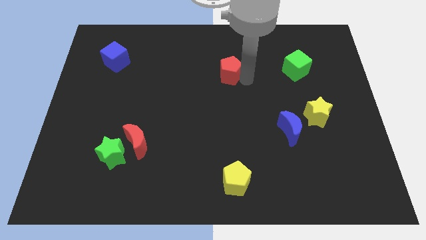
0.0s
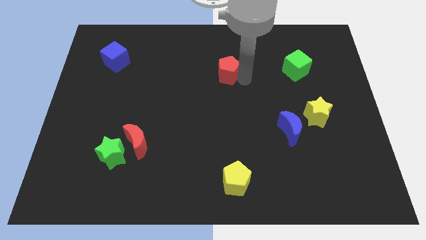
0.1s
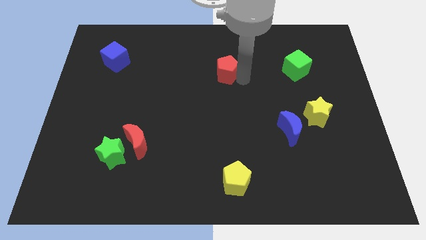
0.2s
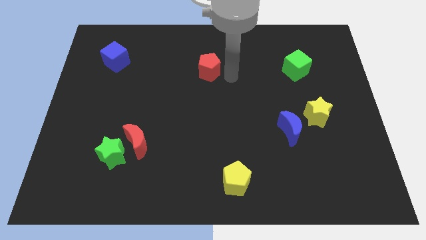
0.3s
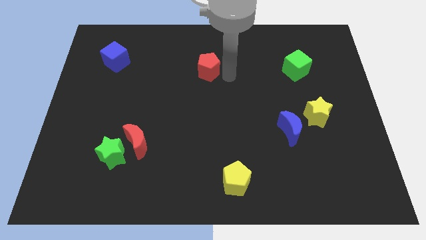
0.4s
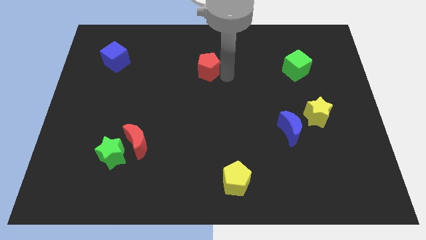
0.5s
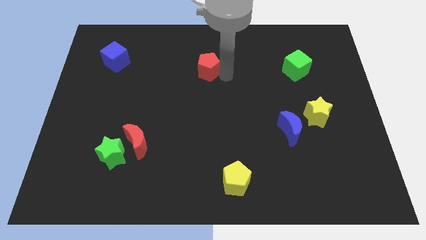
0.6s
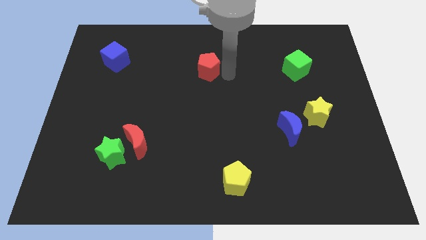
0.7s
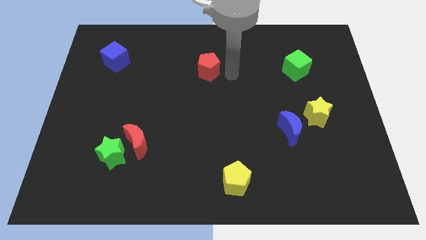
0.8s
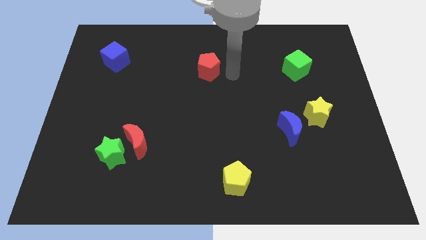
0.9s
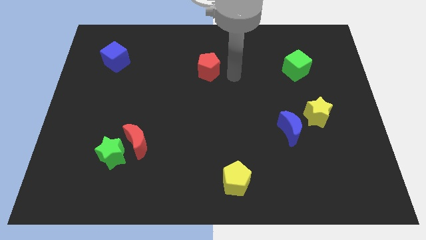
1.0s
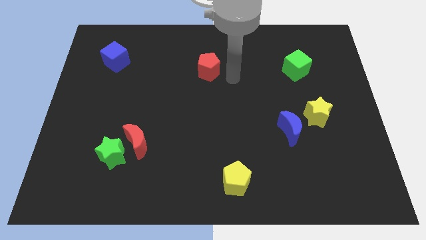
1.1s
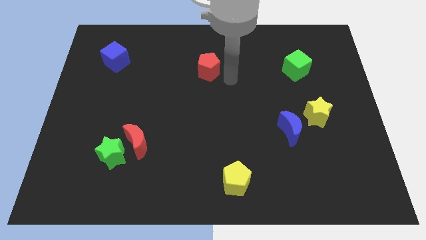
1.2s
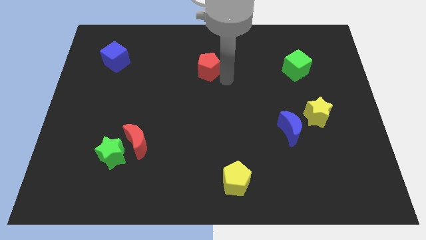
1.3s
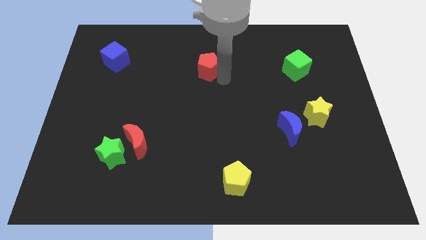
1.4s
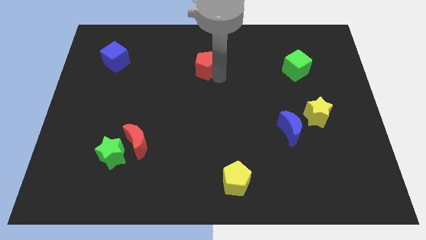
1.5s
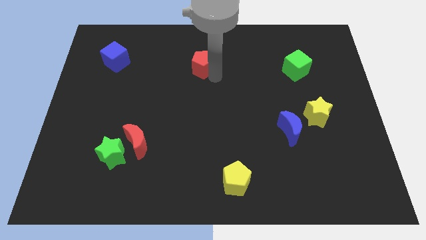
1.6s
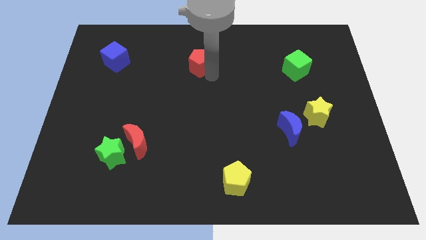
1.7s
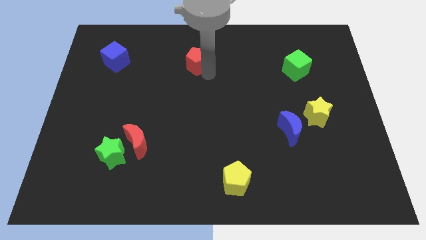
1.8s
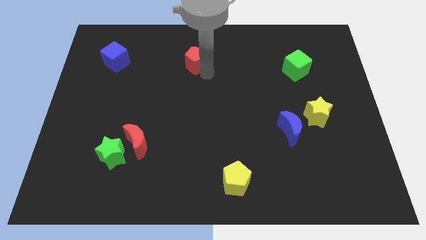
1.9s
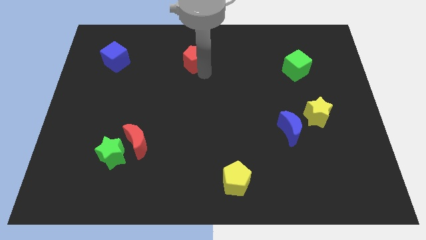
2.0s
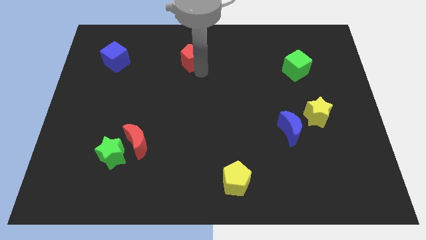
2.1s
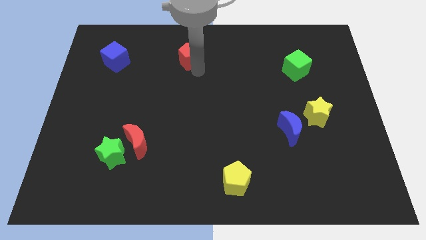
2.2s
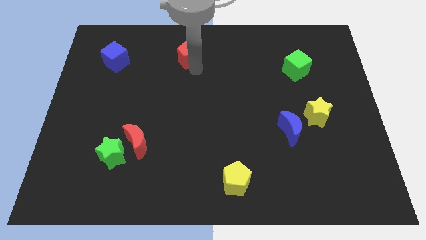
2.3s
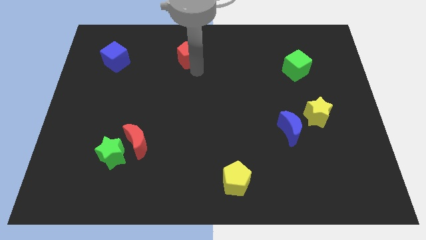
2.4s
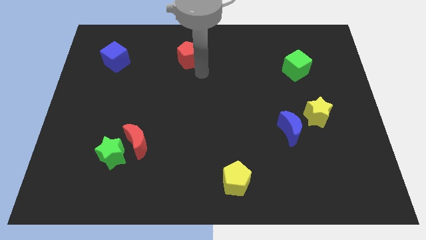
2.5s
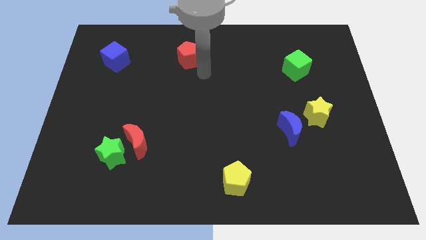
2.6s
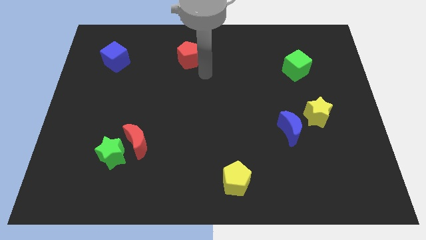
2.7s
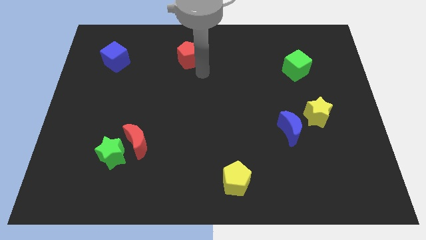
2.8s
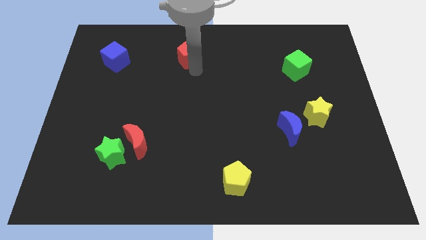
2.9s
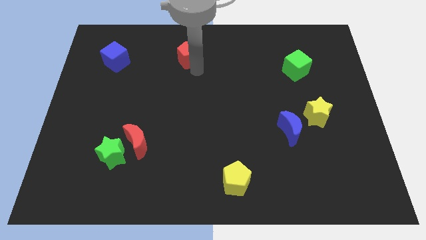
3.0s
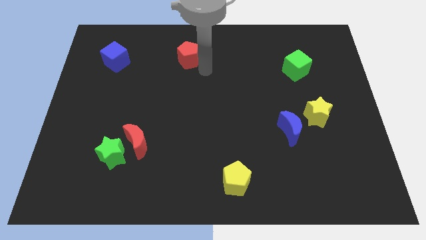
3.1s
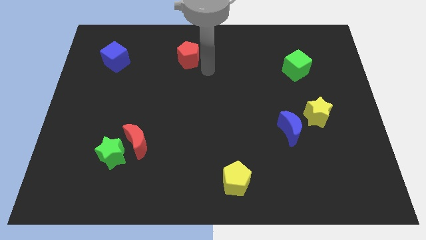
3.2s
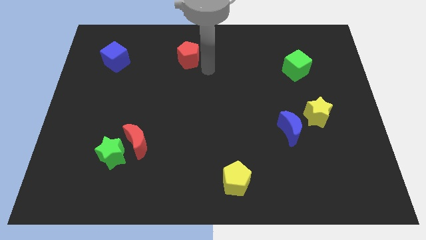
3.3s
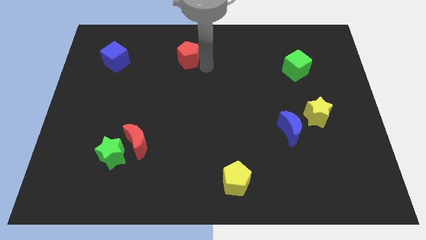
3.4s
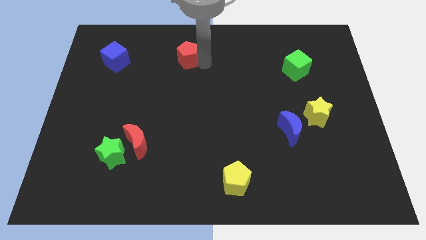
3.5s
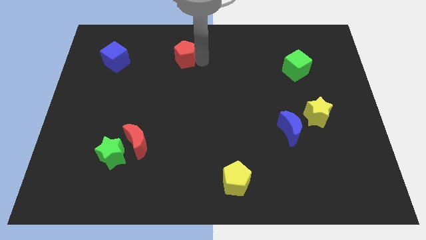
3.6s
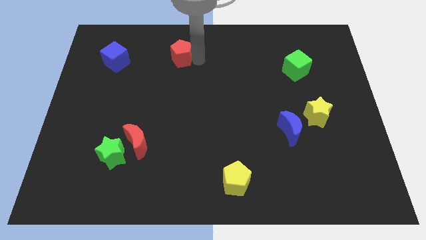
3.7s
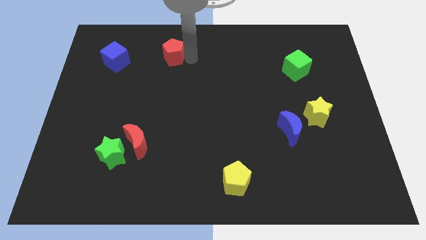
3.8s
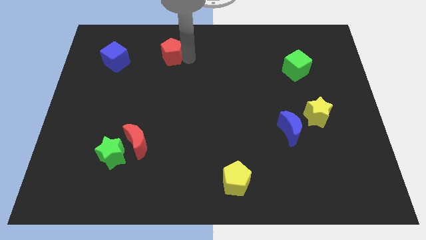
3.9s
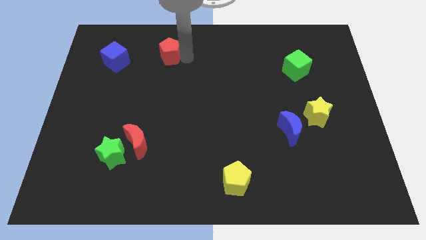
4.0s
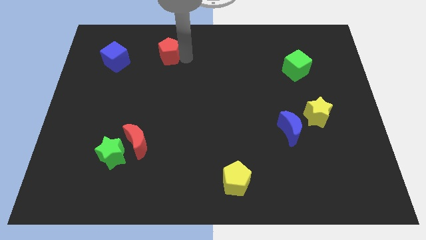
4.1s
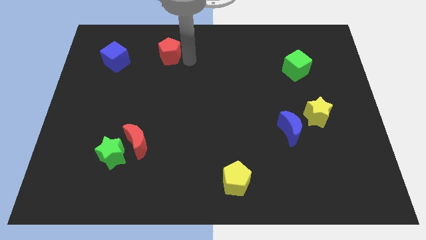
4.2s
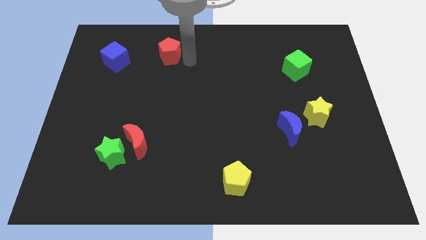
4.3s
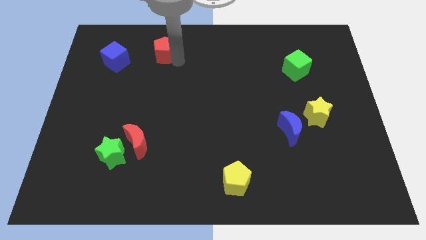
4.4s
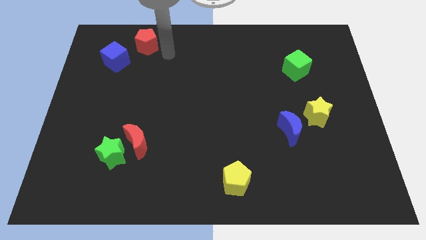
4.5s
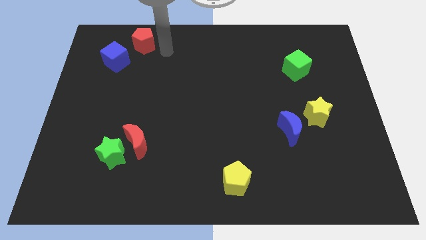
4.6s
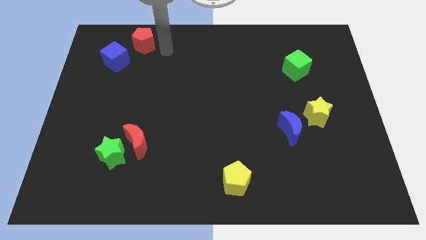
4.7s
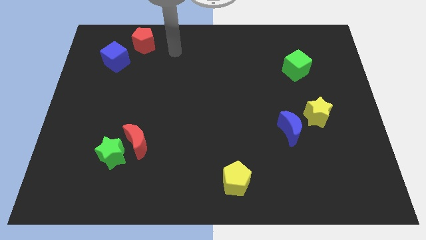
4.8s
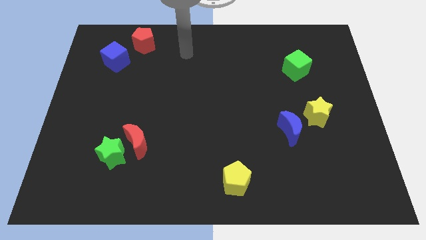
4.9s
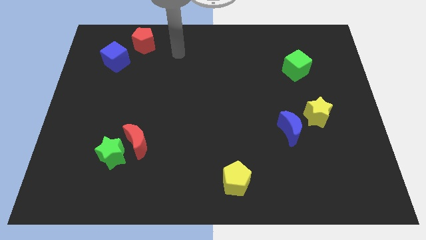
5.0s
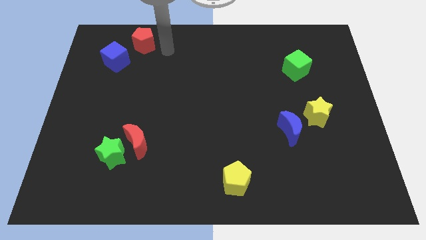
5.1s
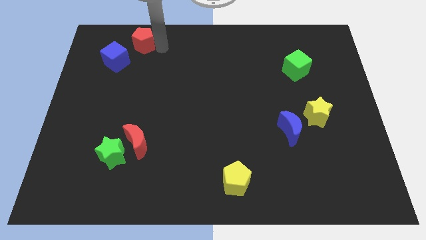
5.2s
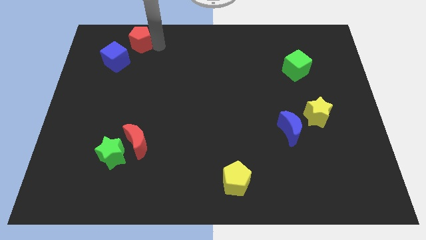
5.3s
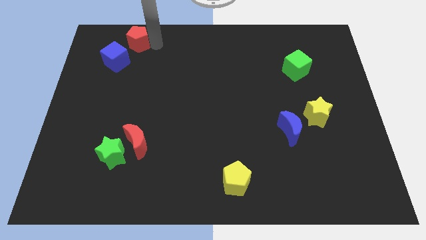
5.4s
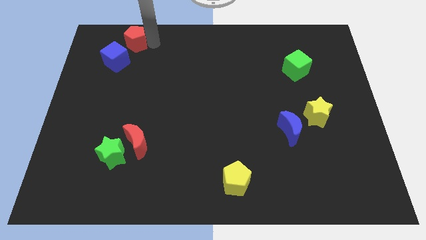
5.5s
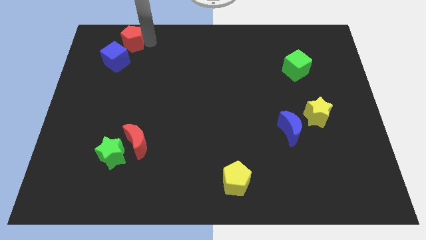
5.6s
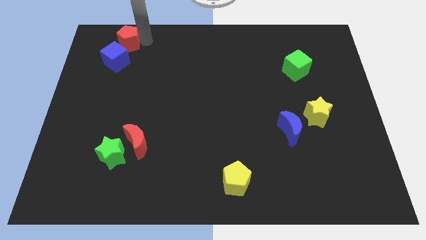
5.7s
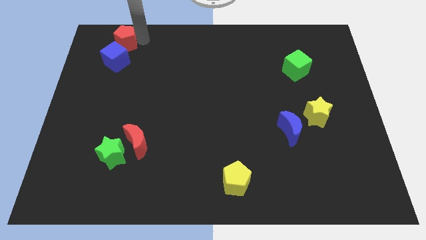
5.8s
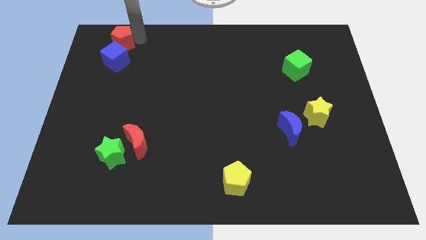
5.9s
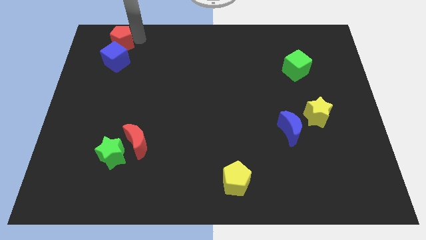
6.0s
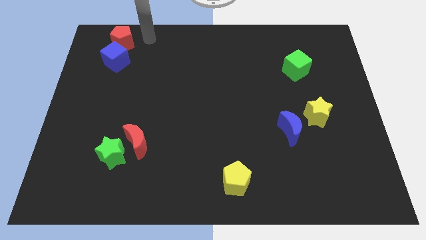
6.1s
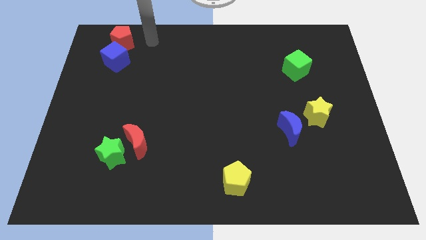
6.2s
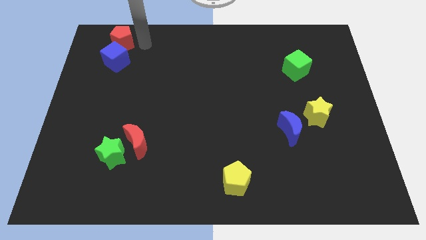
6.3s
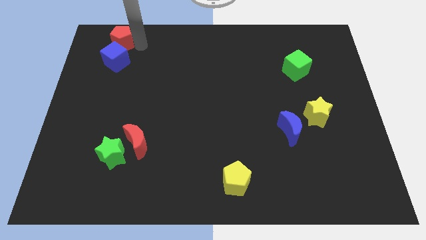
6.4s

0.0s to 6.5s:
place red pentagon above blue cube

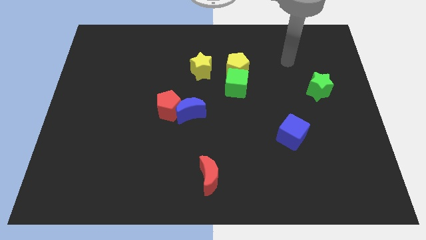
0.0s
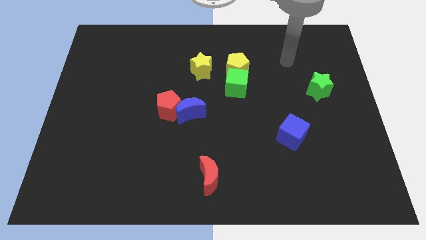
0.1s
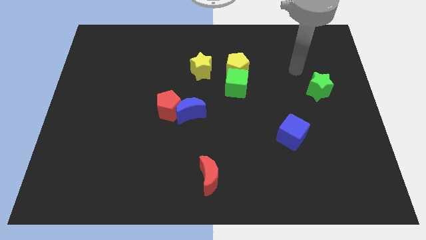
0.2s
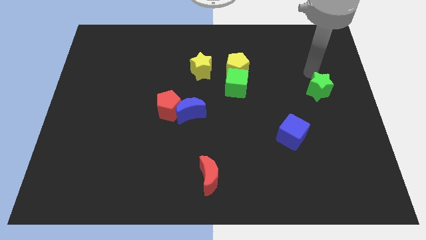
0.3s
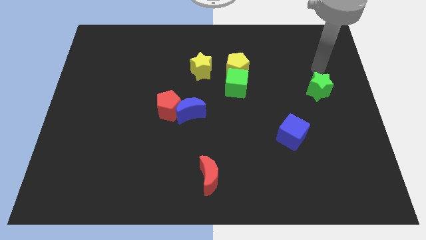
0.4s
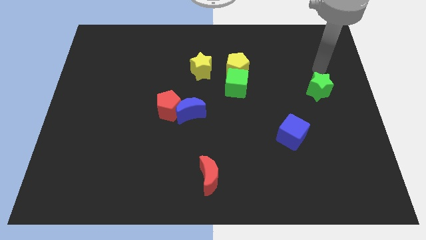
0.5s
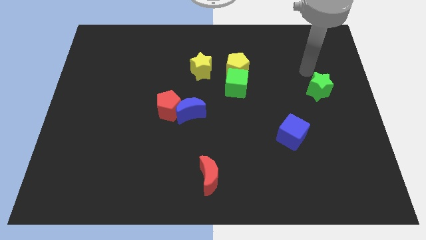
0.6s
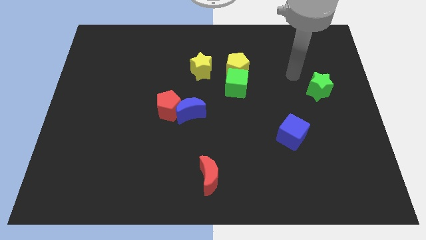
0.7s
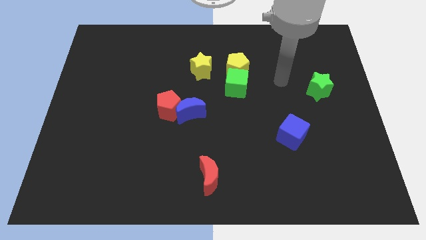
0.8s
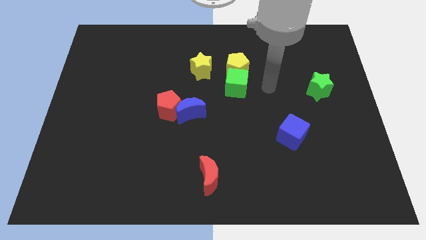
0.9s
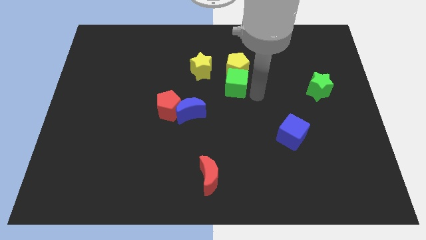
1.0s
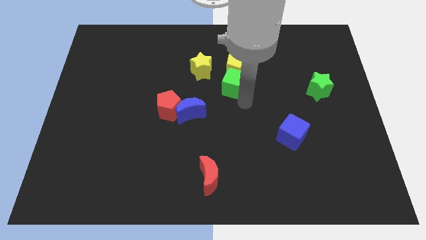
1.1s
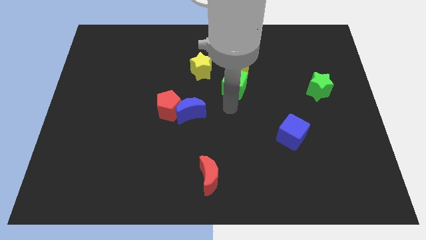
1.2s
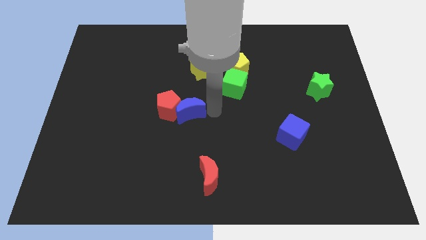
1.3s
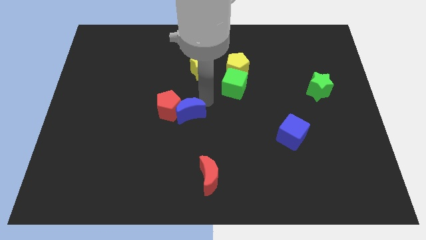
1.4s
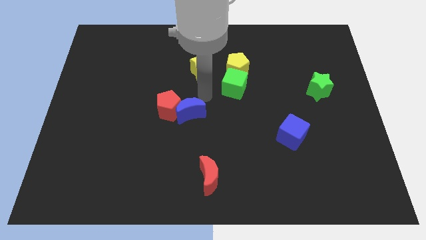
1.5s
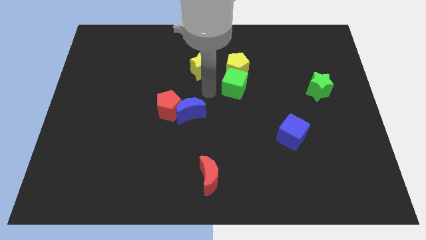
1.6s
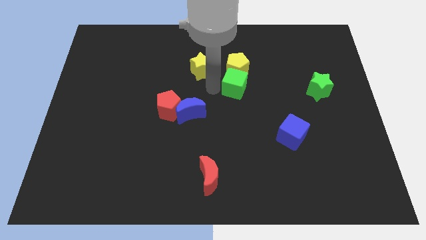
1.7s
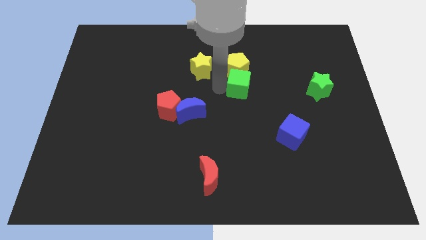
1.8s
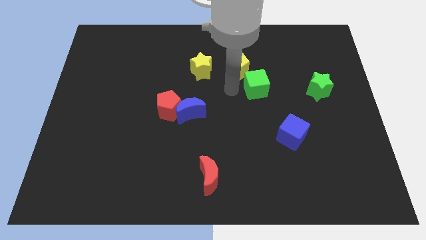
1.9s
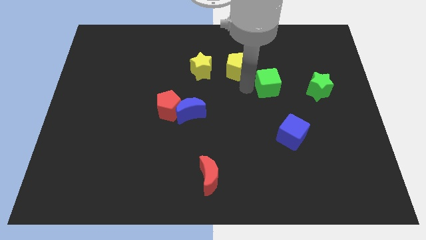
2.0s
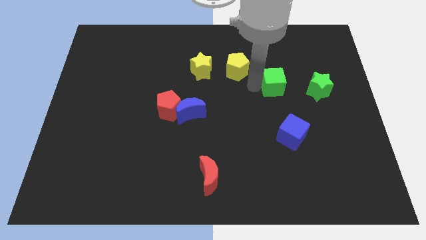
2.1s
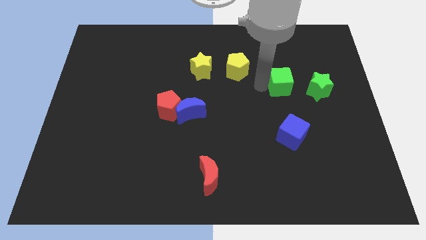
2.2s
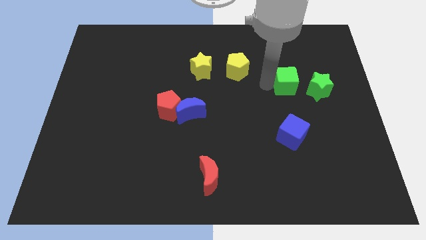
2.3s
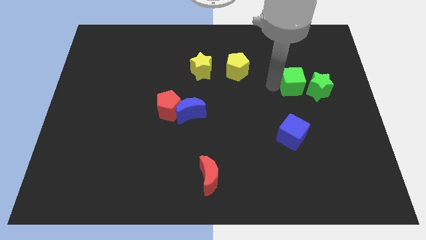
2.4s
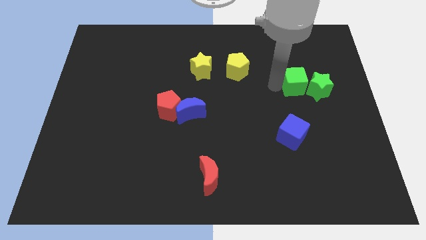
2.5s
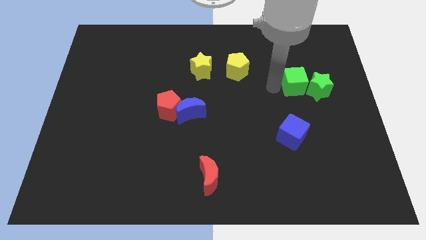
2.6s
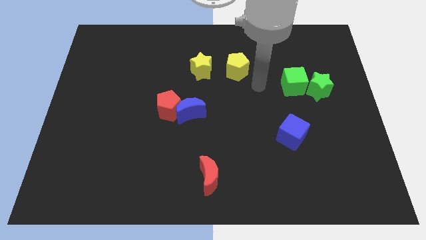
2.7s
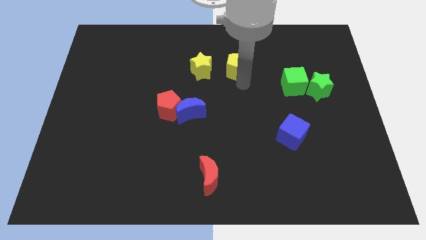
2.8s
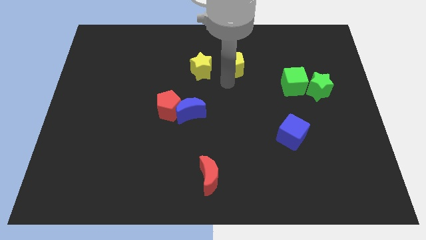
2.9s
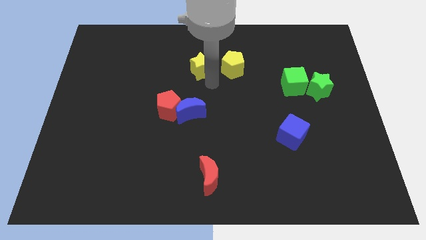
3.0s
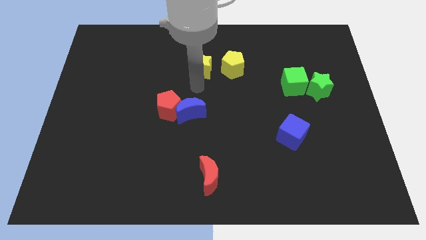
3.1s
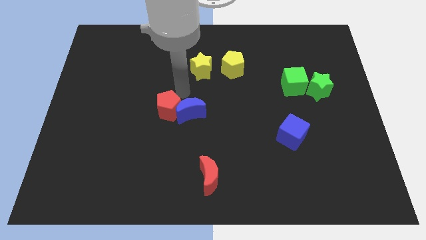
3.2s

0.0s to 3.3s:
push the green cube close to the left side of the green star
